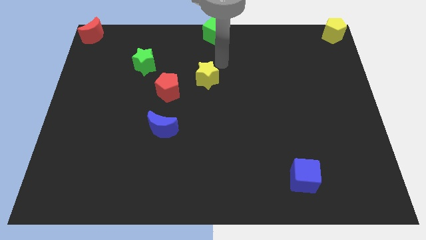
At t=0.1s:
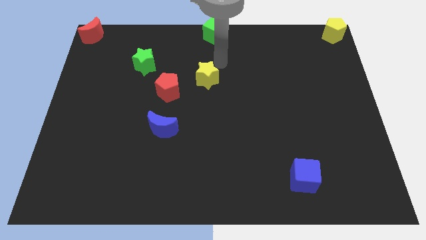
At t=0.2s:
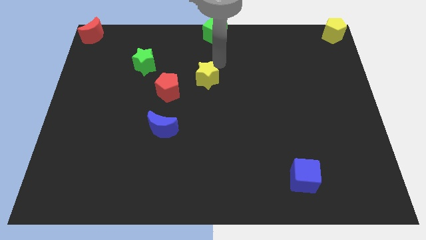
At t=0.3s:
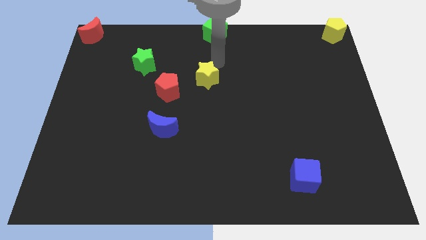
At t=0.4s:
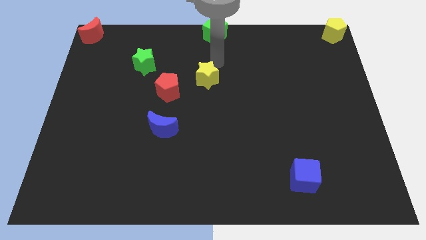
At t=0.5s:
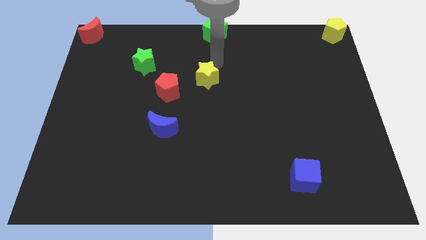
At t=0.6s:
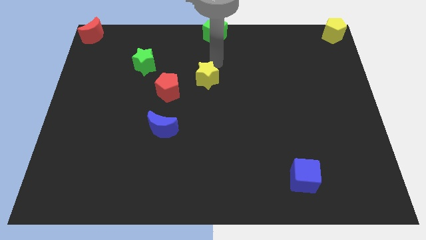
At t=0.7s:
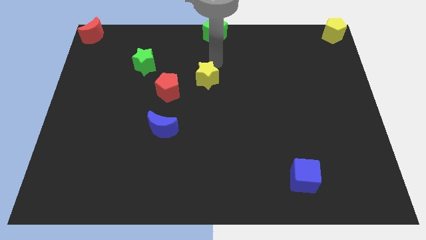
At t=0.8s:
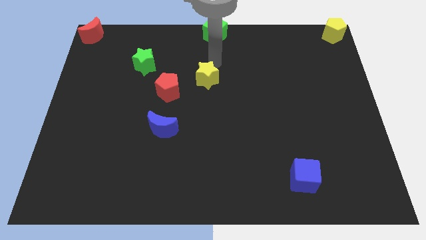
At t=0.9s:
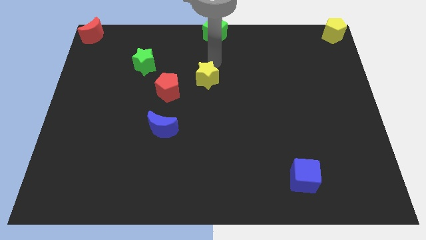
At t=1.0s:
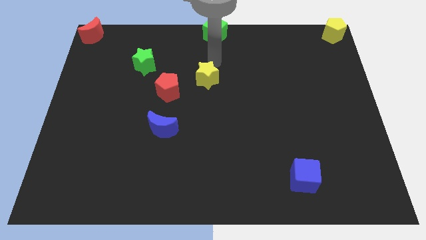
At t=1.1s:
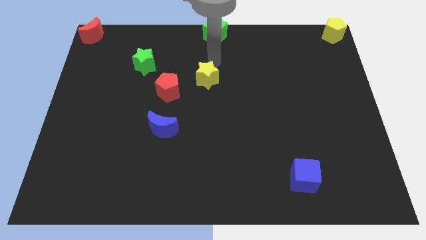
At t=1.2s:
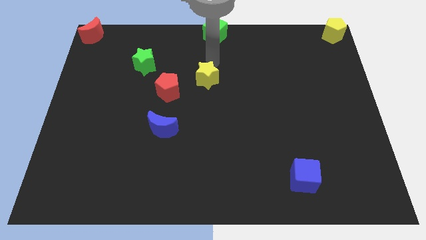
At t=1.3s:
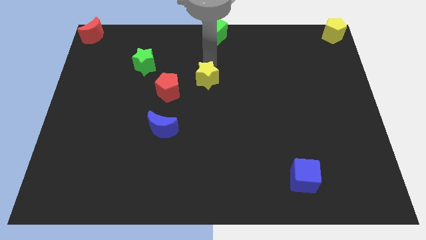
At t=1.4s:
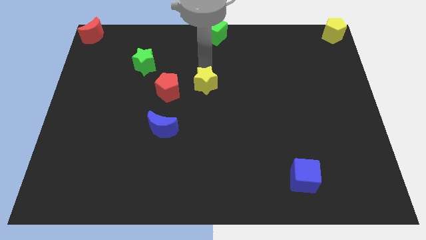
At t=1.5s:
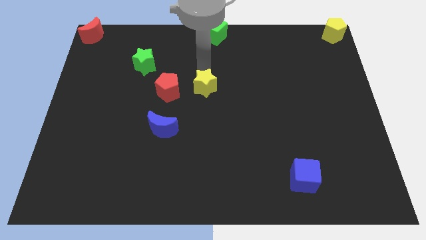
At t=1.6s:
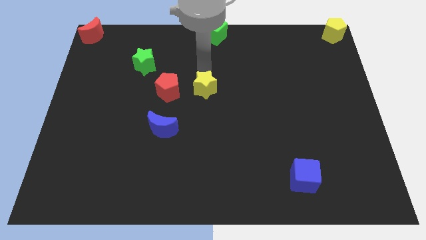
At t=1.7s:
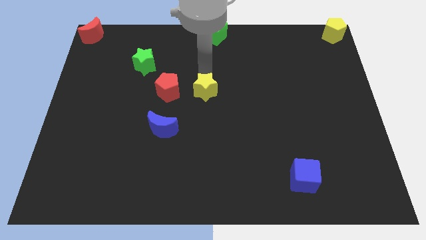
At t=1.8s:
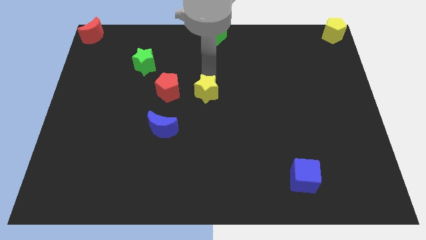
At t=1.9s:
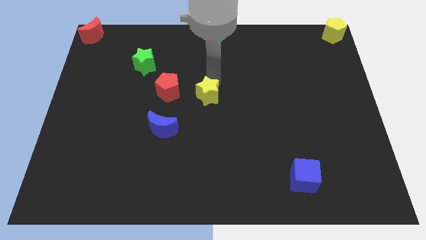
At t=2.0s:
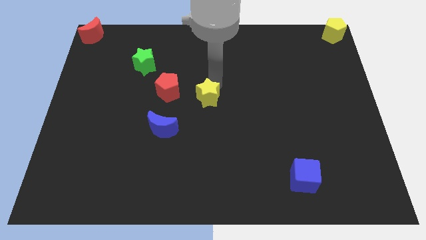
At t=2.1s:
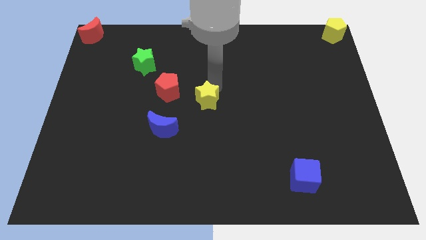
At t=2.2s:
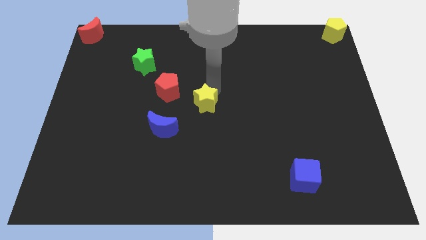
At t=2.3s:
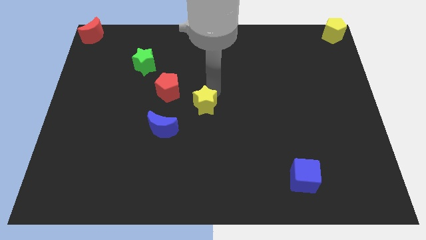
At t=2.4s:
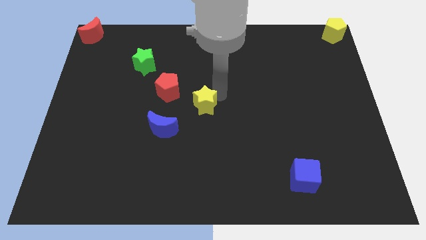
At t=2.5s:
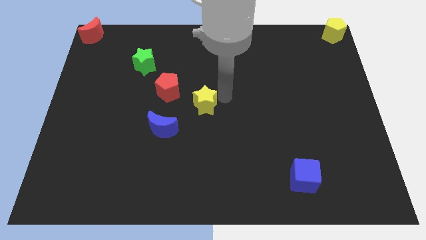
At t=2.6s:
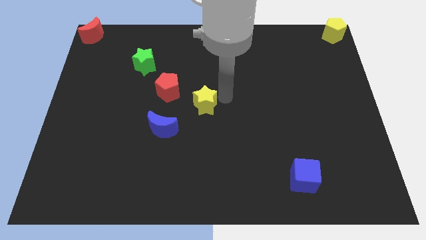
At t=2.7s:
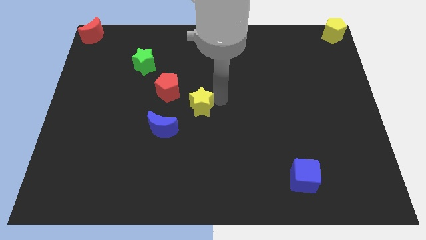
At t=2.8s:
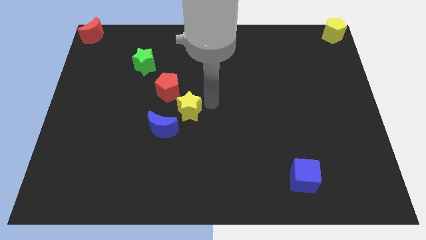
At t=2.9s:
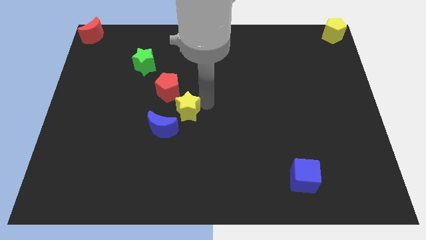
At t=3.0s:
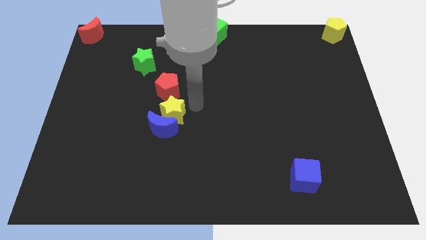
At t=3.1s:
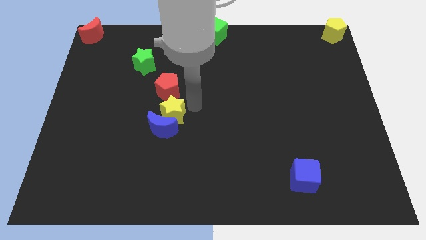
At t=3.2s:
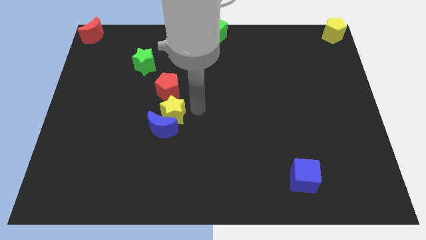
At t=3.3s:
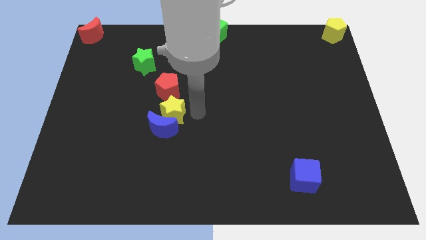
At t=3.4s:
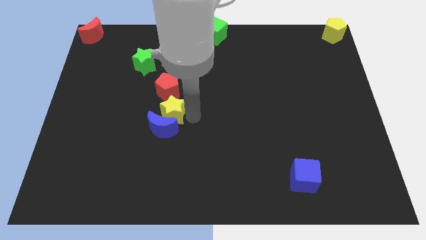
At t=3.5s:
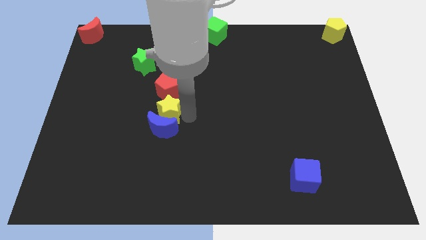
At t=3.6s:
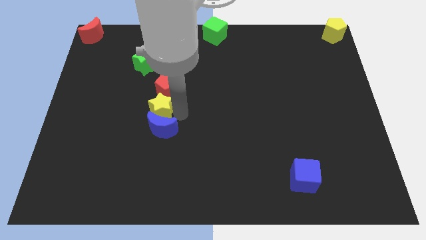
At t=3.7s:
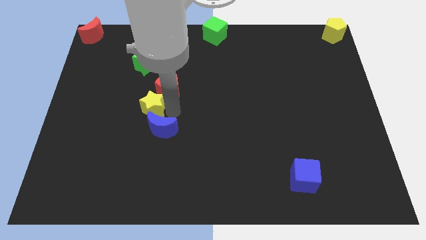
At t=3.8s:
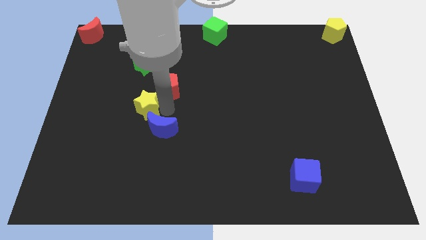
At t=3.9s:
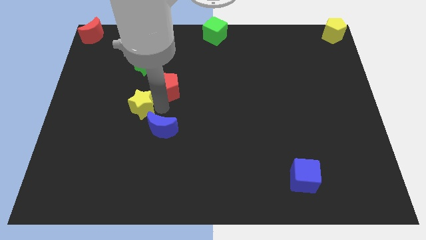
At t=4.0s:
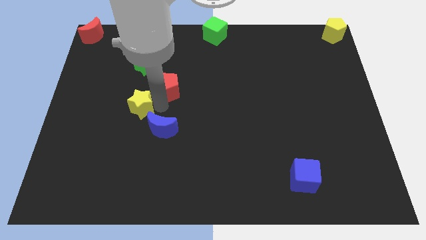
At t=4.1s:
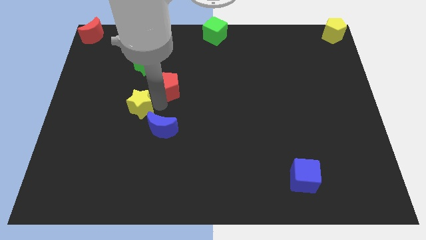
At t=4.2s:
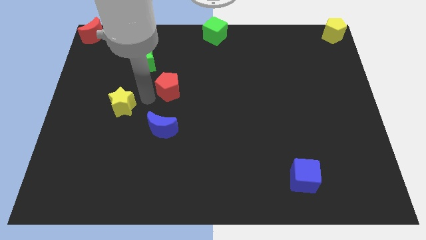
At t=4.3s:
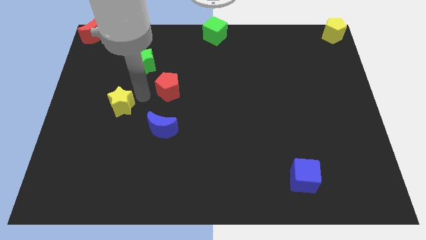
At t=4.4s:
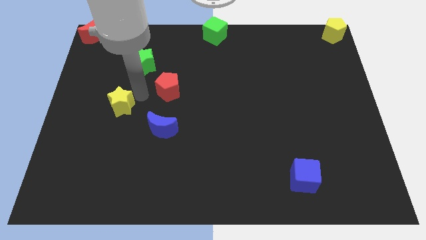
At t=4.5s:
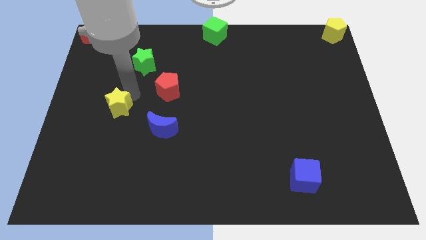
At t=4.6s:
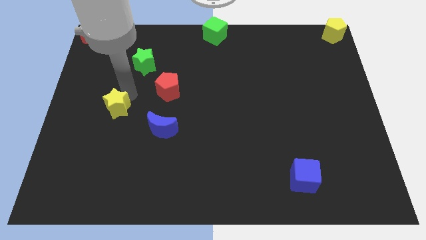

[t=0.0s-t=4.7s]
push the yellow star to the center left of the board

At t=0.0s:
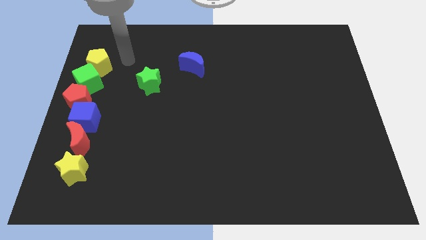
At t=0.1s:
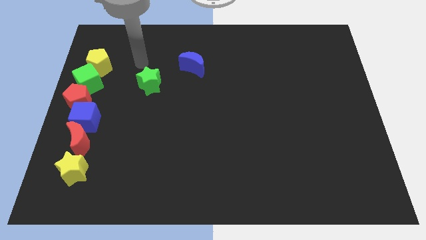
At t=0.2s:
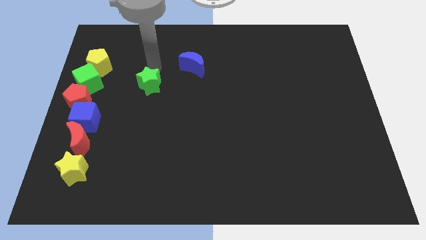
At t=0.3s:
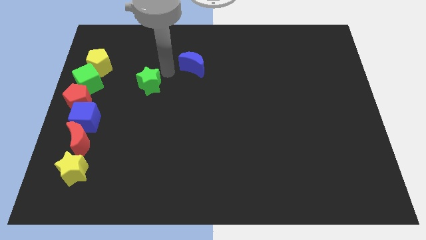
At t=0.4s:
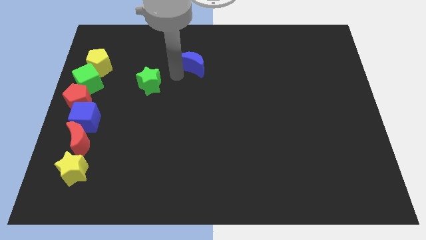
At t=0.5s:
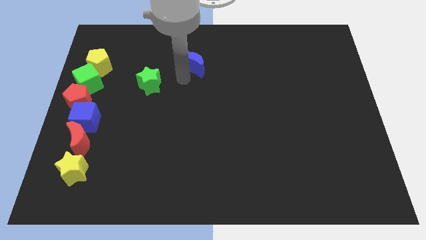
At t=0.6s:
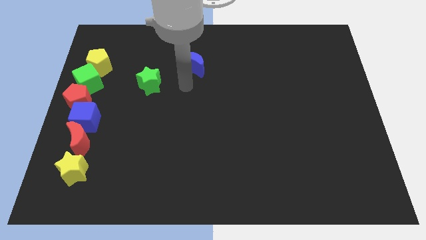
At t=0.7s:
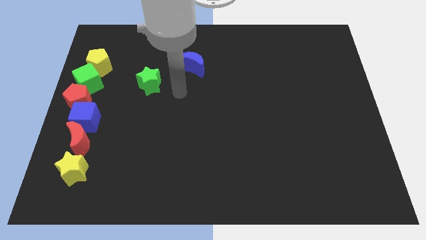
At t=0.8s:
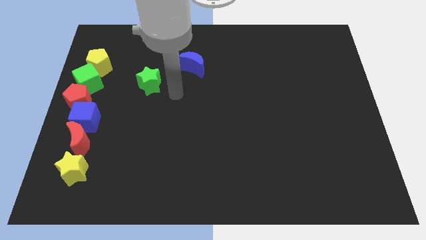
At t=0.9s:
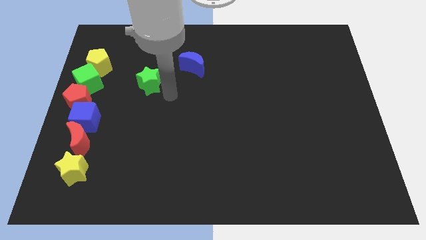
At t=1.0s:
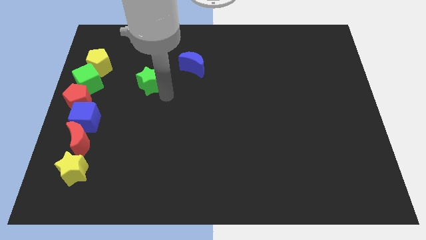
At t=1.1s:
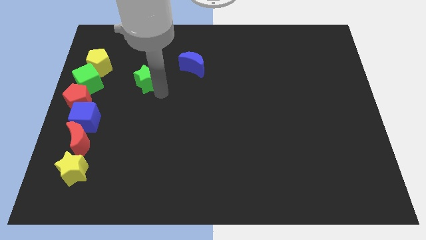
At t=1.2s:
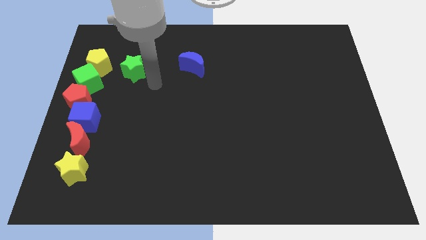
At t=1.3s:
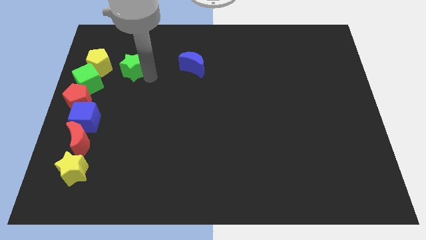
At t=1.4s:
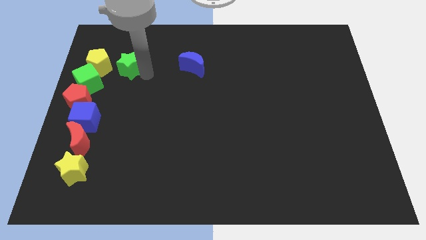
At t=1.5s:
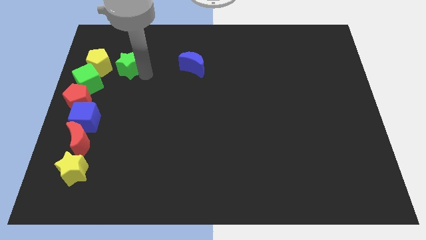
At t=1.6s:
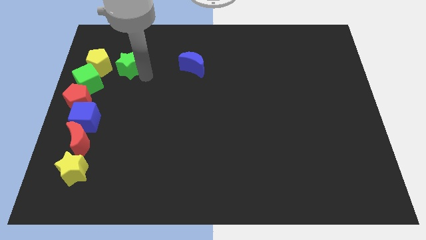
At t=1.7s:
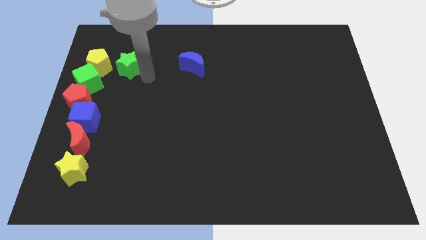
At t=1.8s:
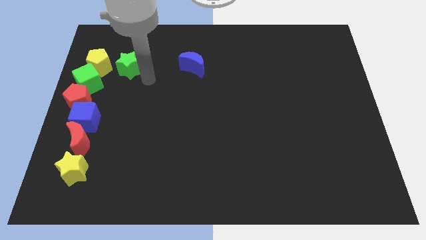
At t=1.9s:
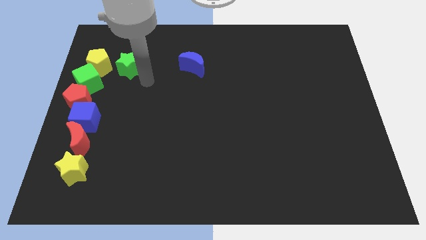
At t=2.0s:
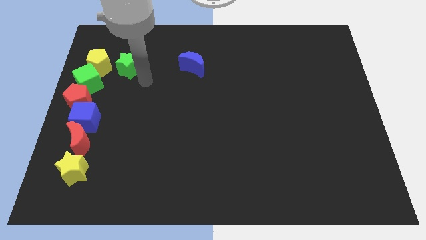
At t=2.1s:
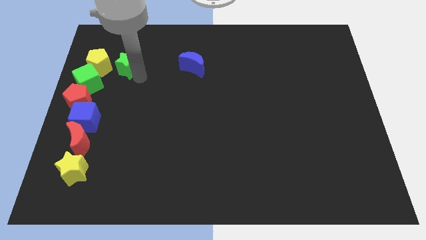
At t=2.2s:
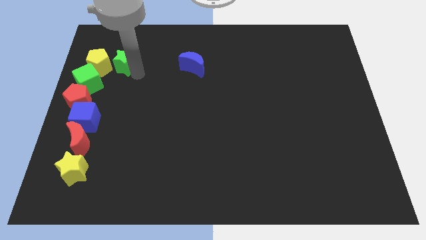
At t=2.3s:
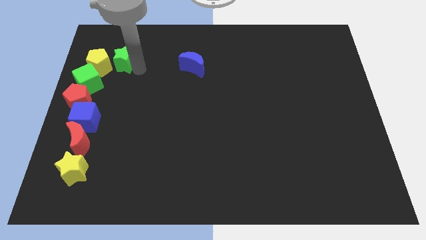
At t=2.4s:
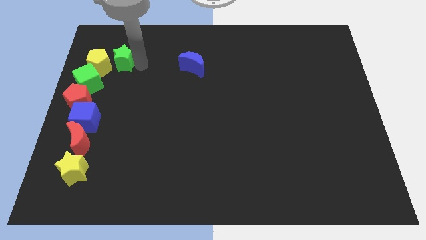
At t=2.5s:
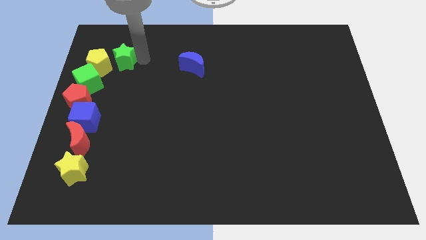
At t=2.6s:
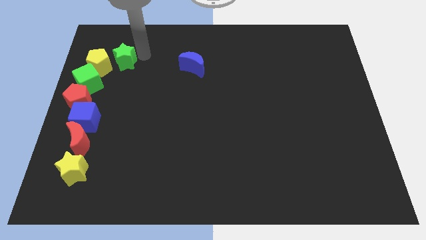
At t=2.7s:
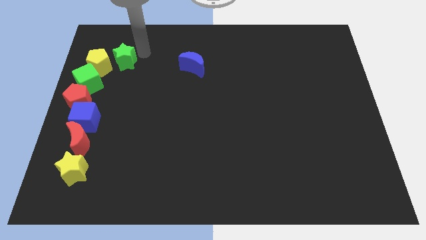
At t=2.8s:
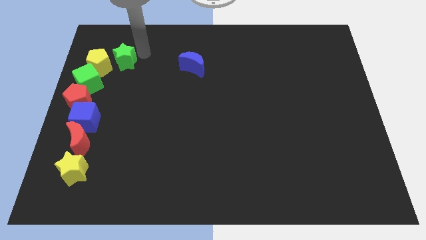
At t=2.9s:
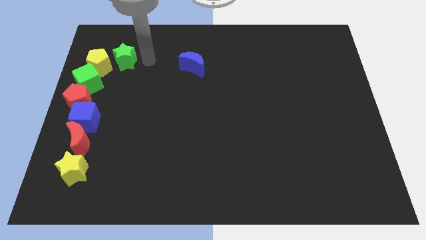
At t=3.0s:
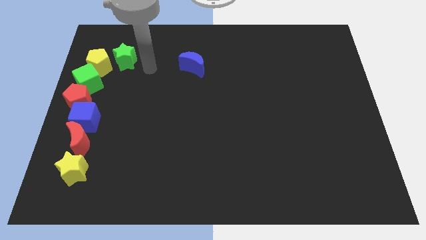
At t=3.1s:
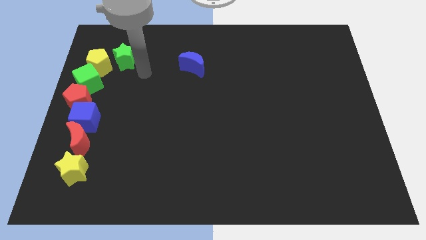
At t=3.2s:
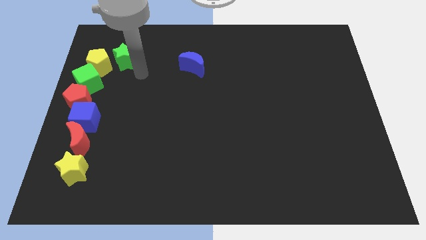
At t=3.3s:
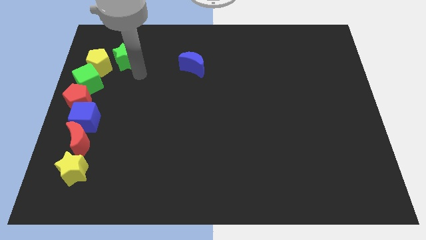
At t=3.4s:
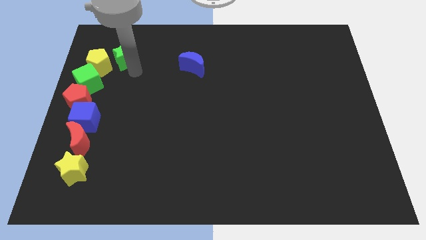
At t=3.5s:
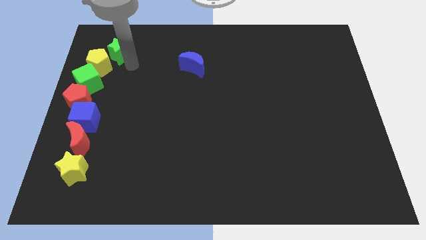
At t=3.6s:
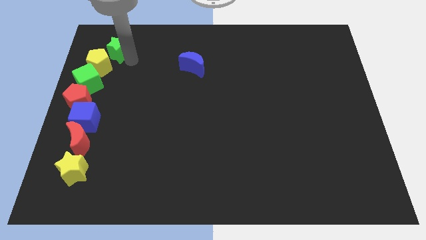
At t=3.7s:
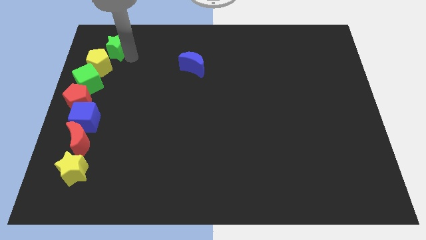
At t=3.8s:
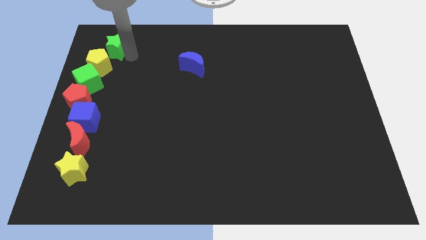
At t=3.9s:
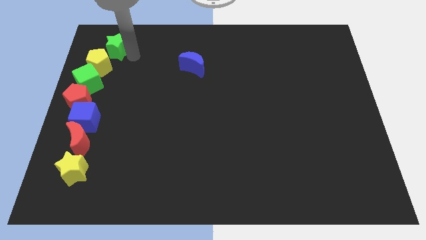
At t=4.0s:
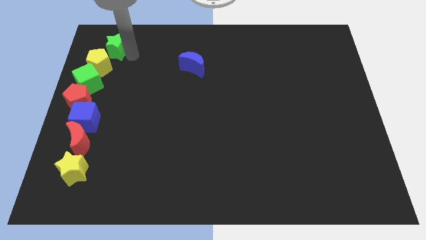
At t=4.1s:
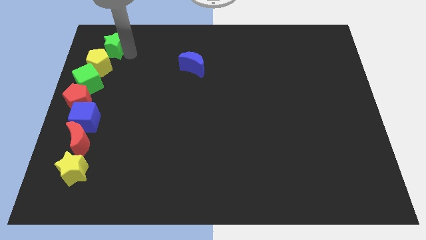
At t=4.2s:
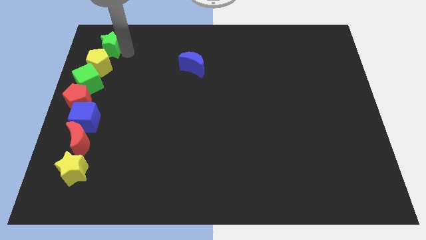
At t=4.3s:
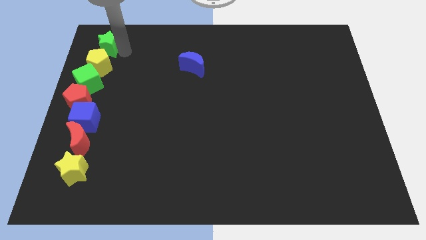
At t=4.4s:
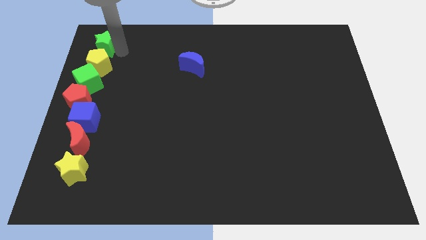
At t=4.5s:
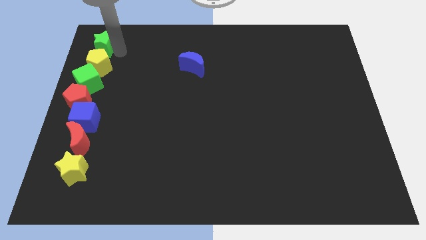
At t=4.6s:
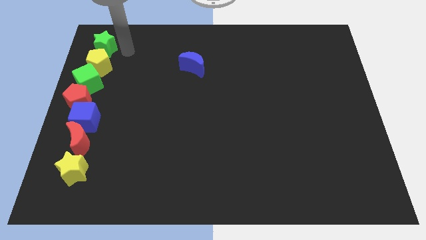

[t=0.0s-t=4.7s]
place the green star above the yellow pentagon
